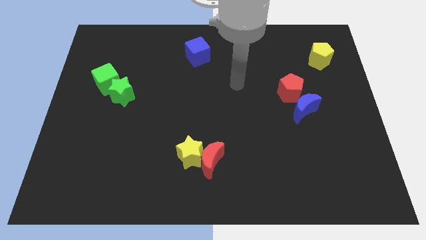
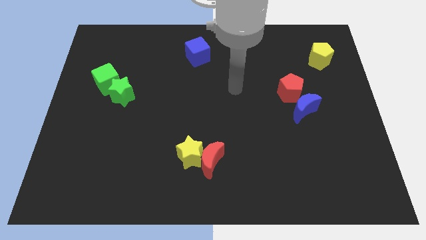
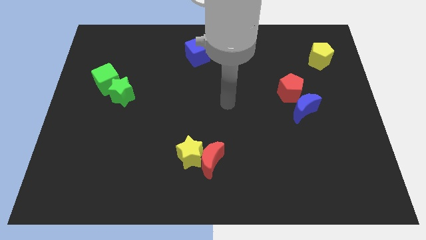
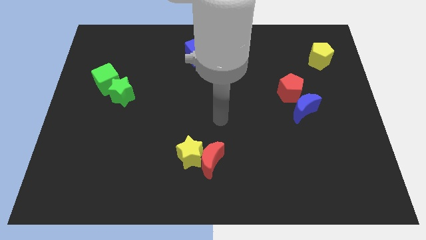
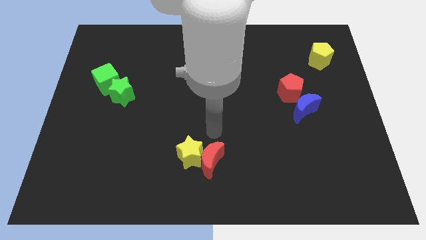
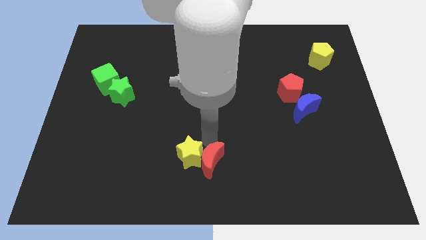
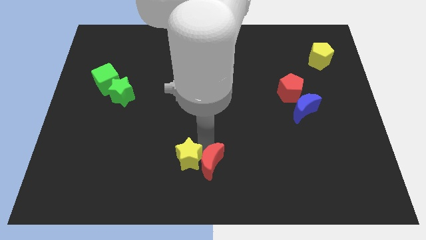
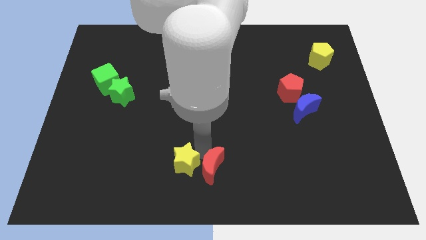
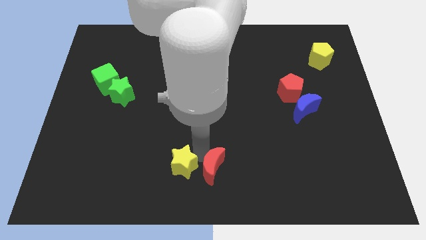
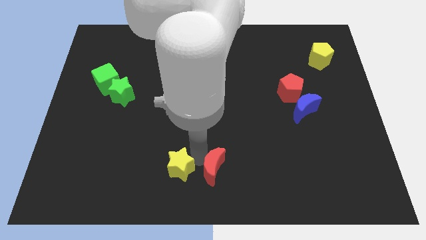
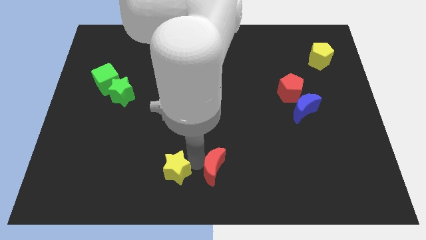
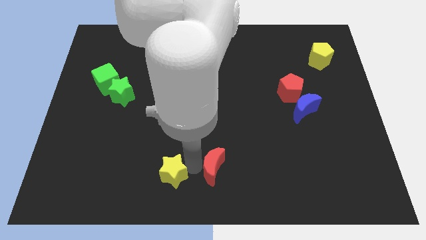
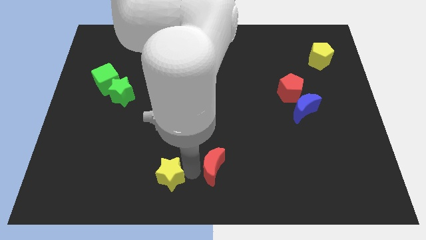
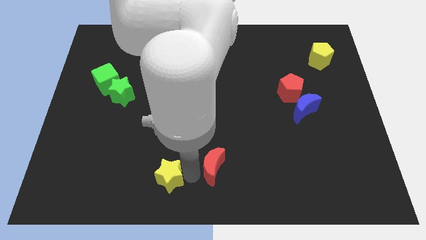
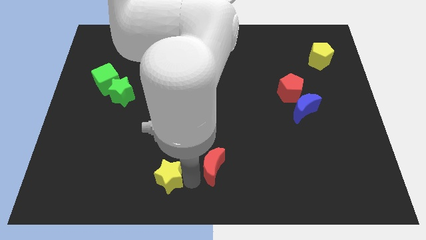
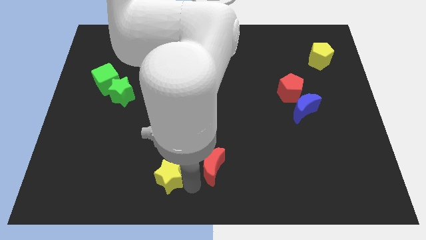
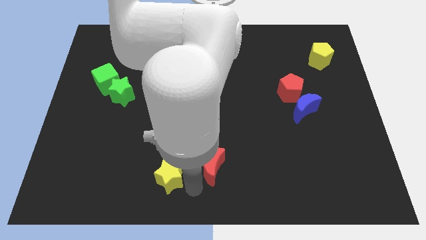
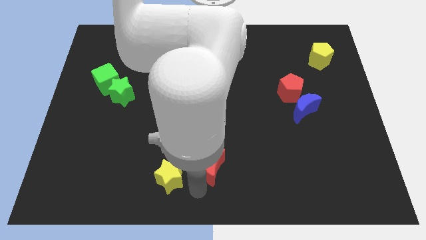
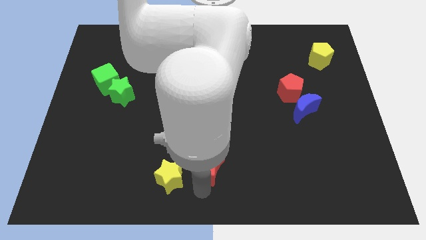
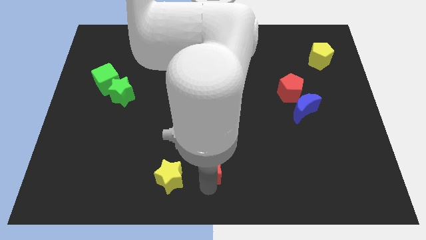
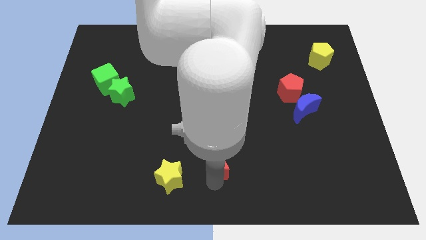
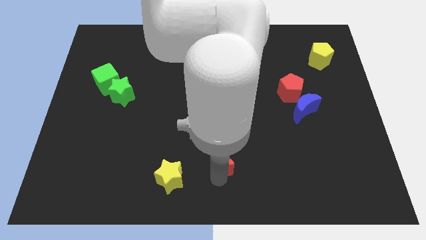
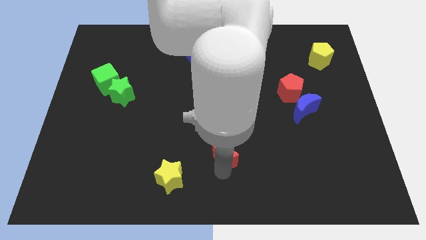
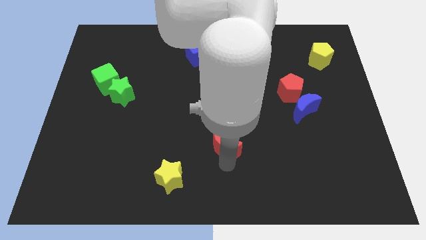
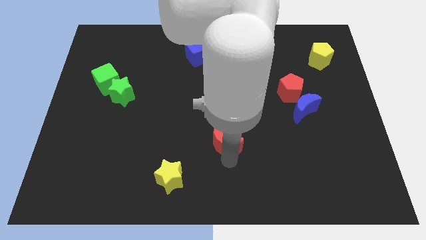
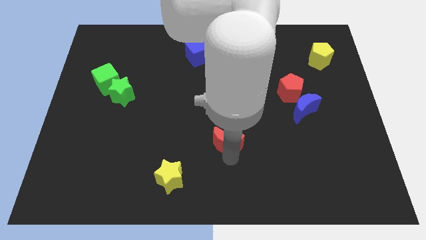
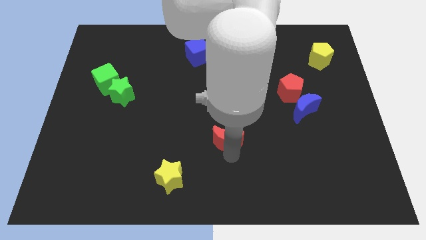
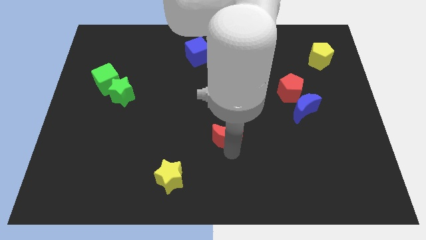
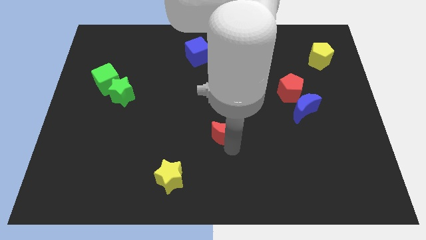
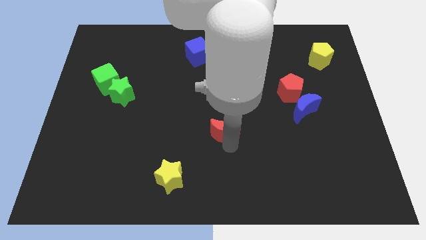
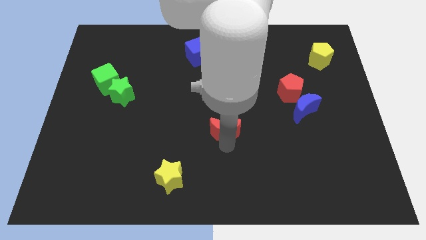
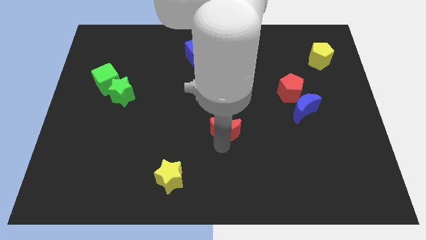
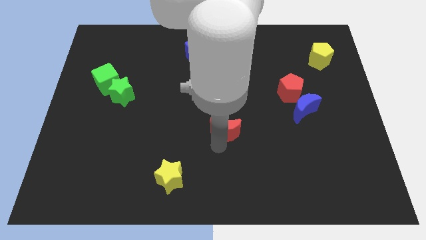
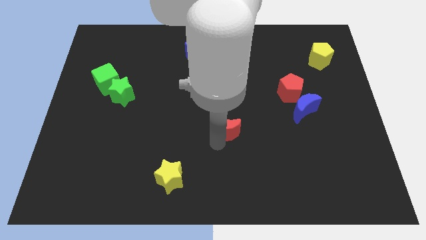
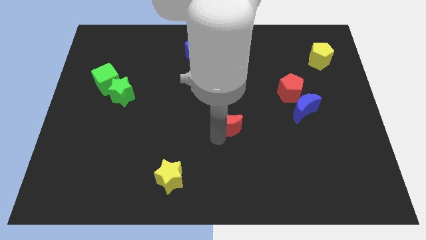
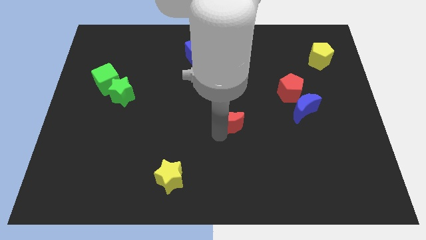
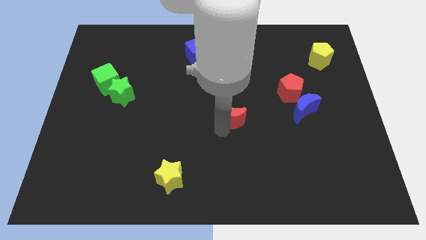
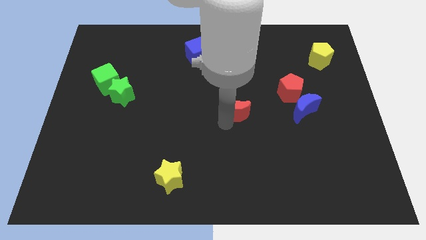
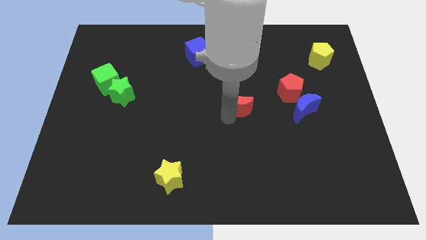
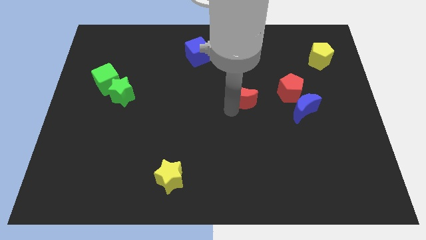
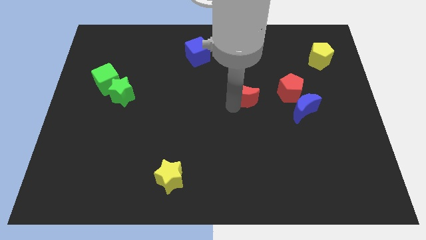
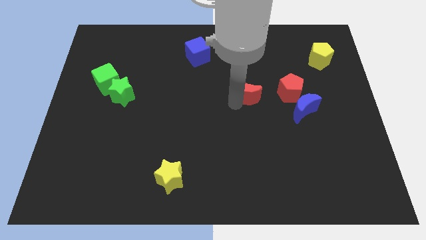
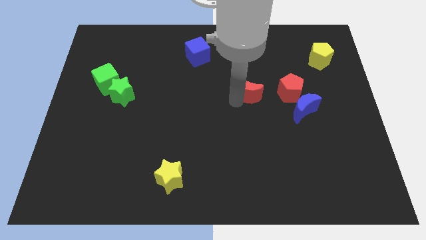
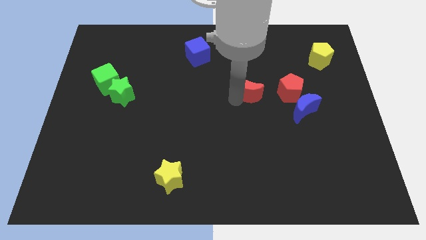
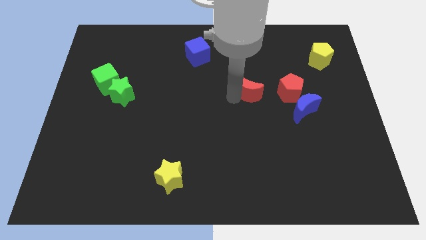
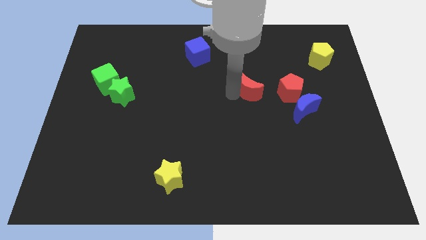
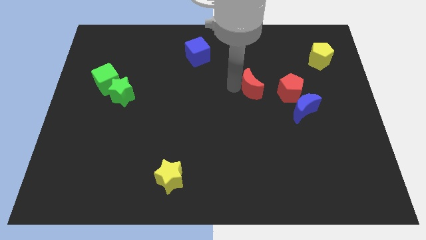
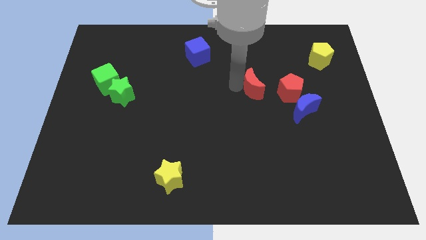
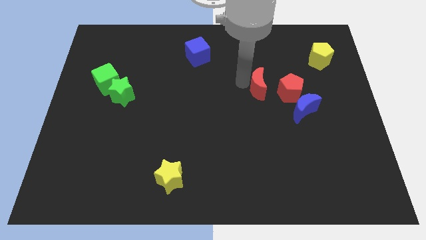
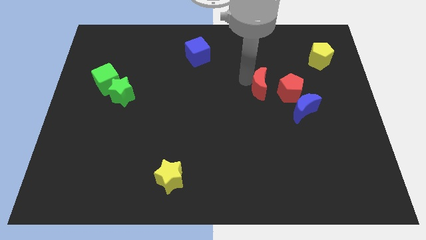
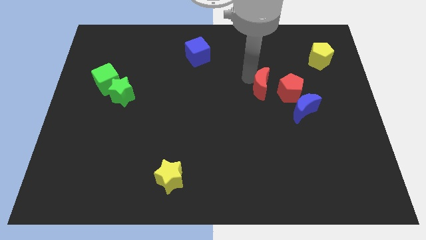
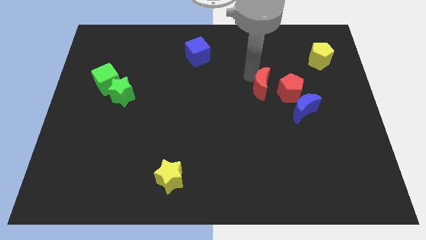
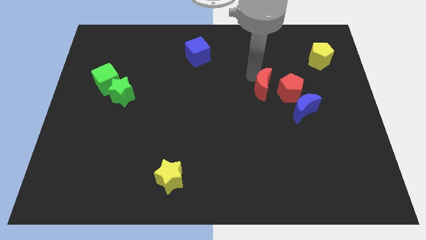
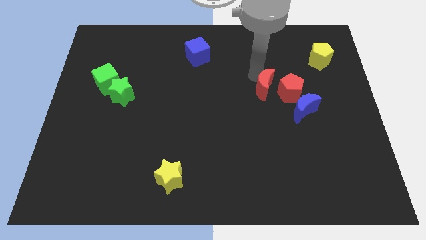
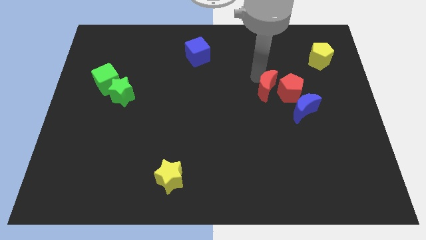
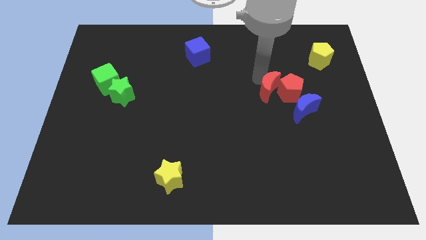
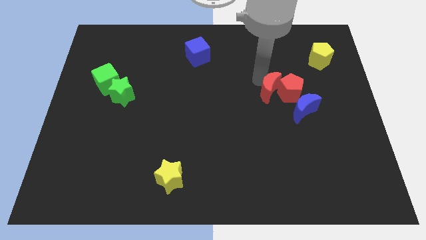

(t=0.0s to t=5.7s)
put the red moon close to the red pentagon

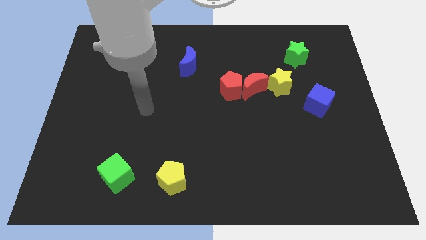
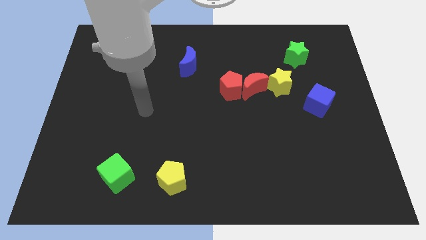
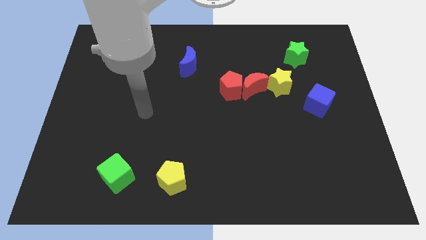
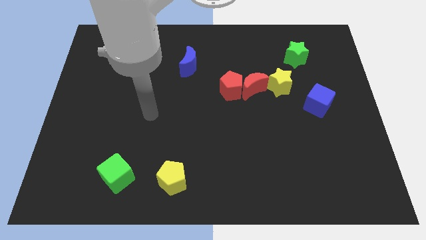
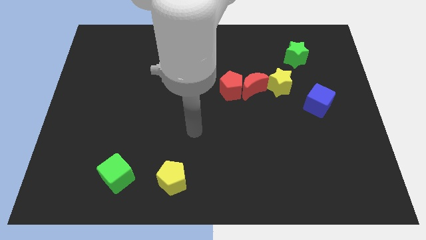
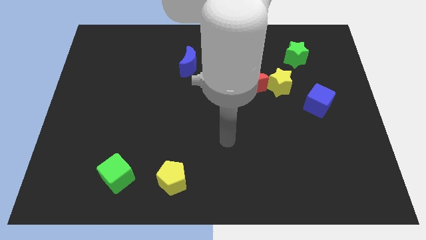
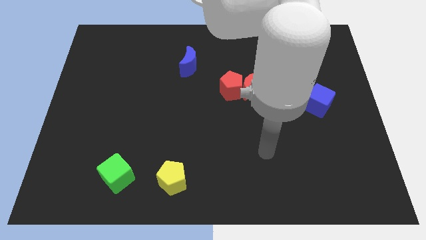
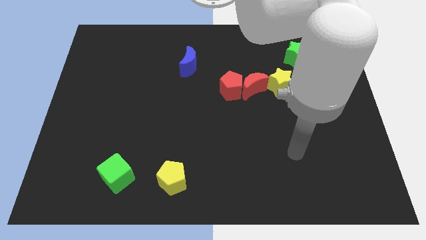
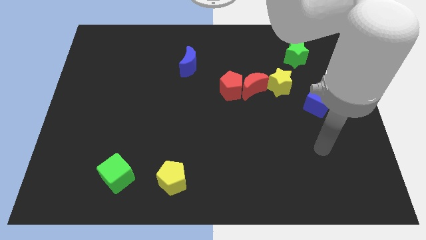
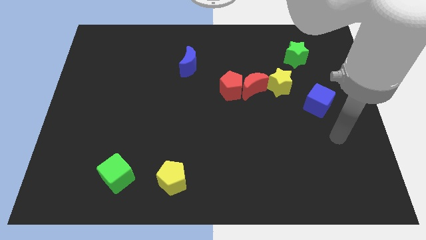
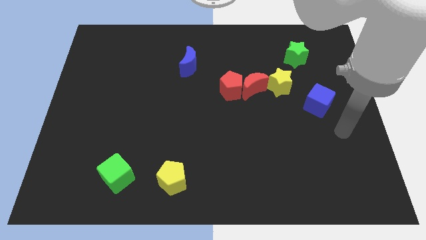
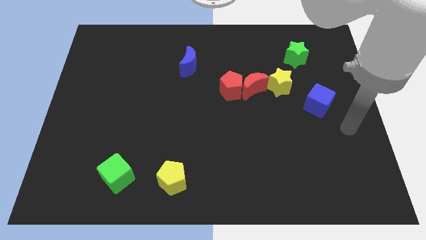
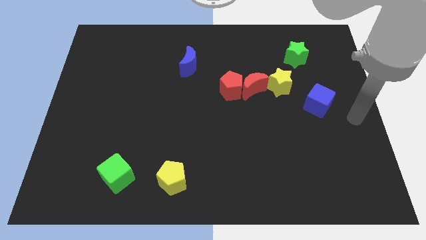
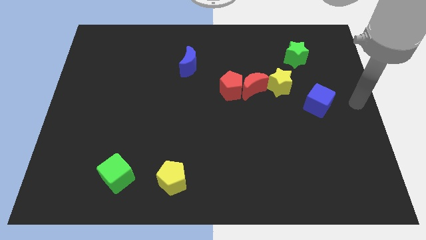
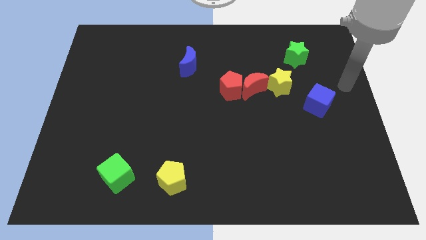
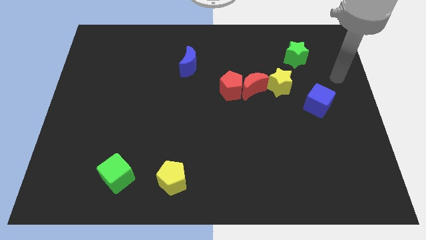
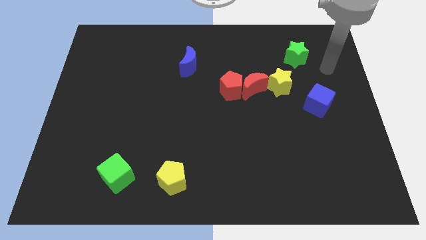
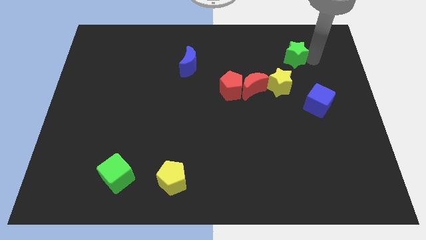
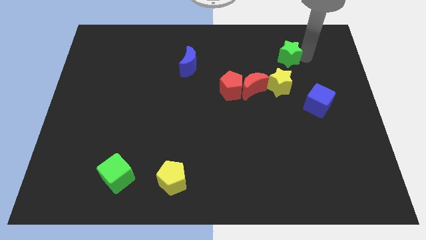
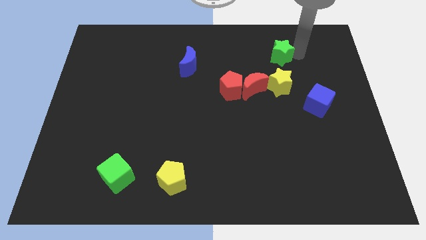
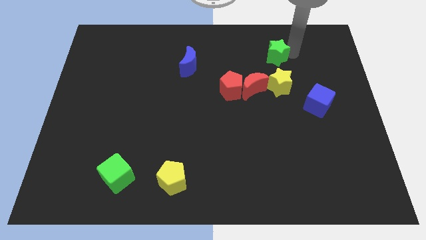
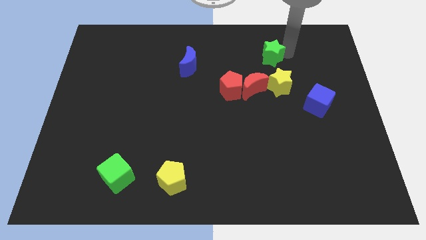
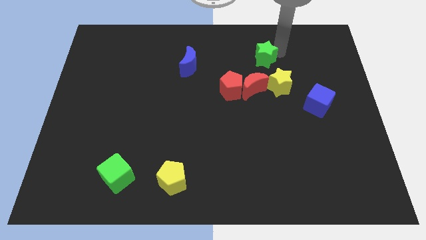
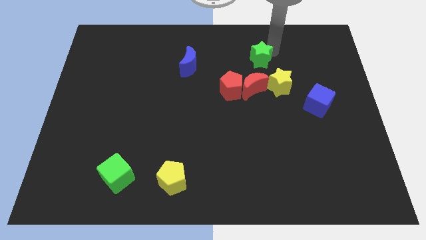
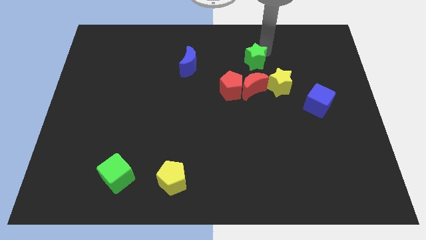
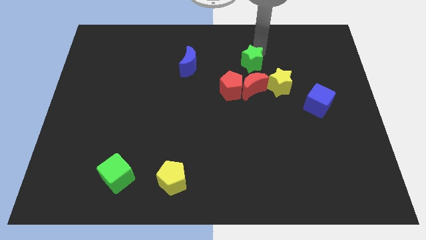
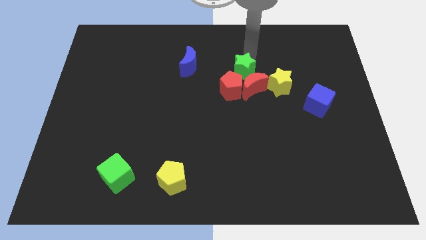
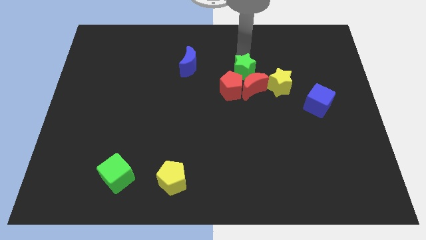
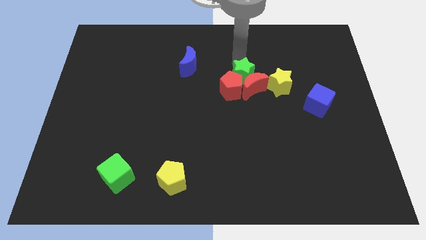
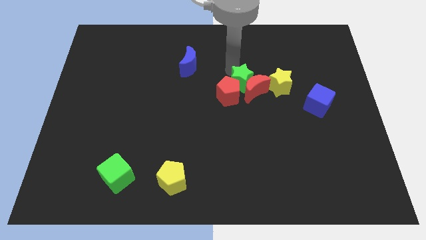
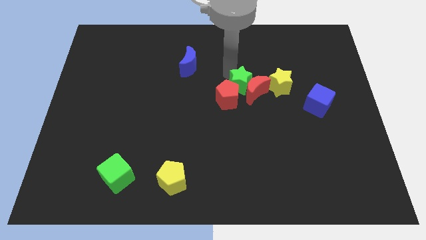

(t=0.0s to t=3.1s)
put the green star towards the red pentagon
